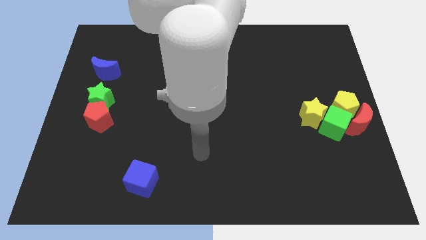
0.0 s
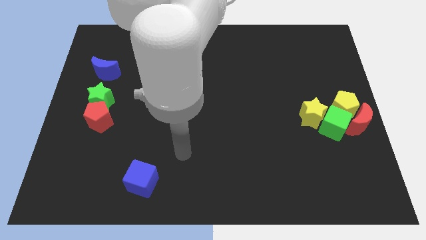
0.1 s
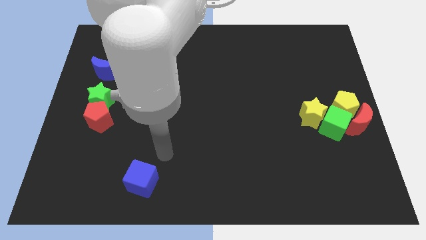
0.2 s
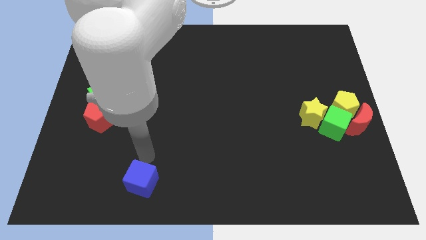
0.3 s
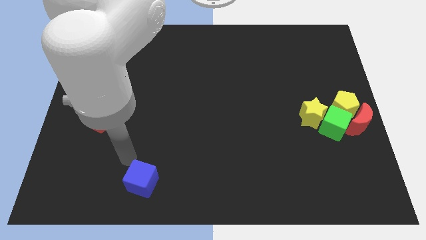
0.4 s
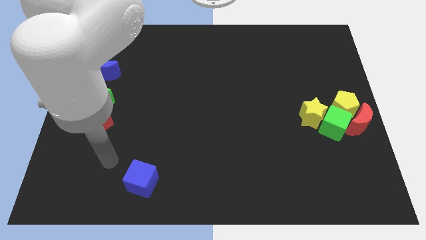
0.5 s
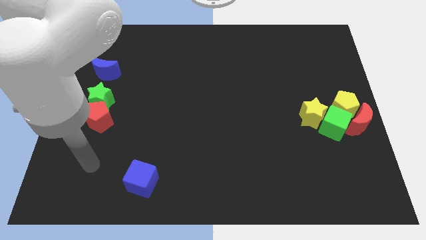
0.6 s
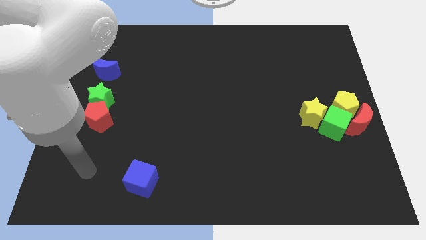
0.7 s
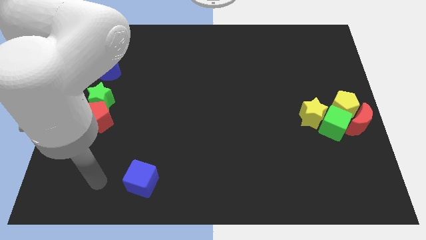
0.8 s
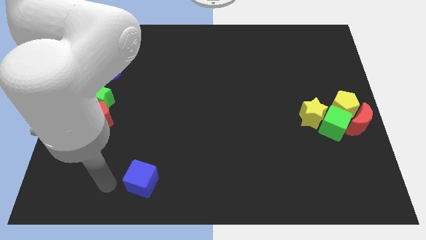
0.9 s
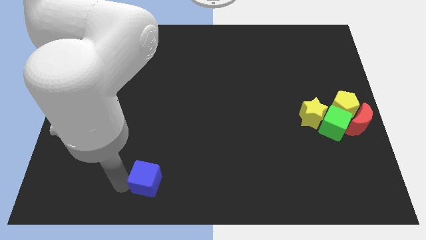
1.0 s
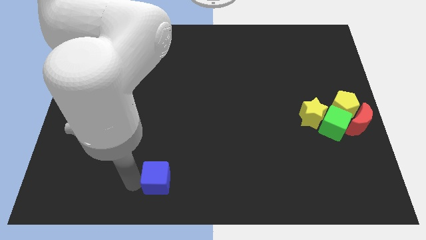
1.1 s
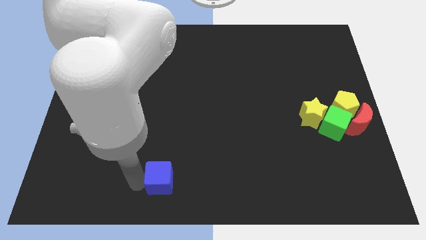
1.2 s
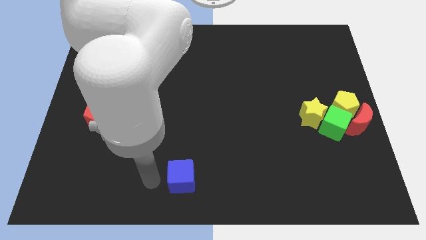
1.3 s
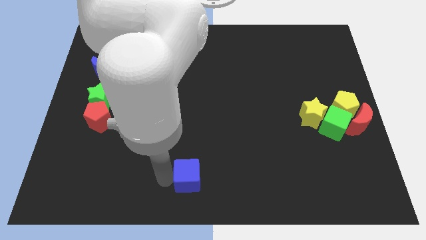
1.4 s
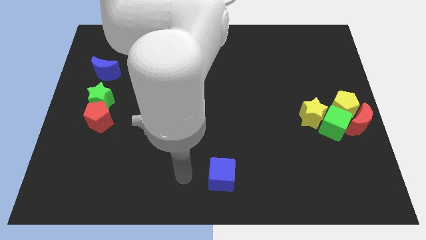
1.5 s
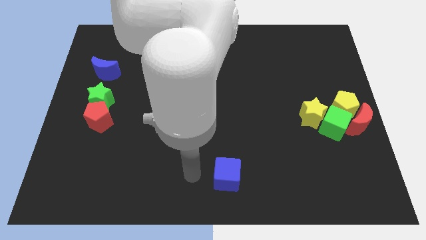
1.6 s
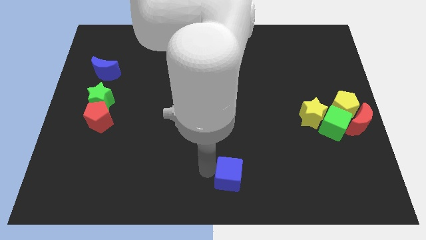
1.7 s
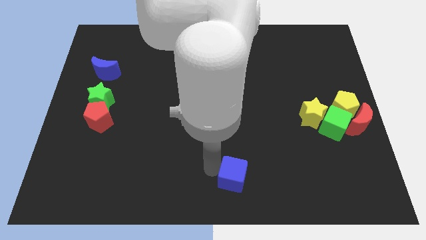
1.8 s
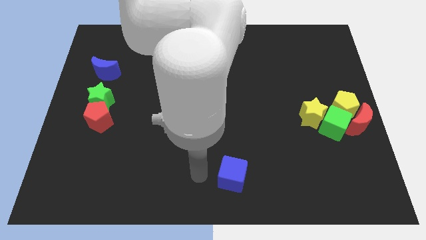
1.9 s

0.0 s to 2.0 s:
push the blue cube to the bottom center of the board

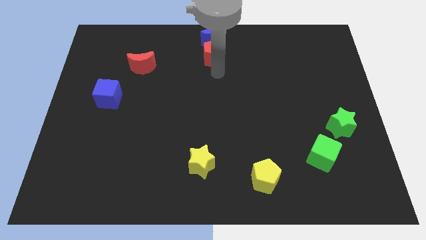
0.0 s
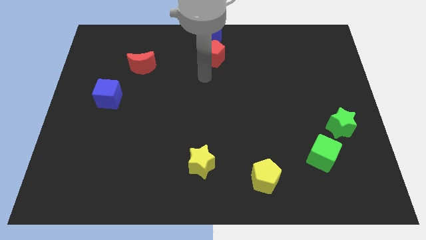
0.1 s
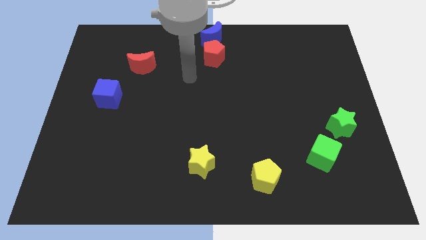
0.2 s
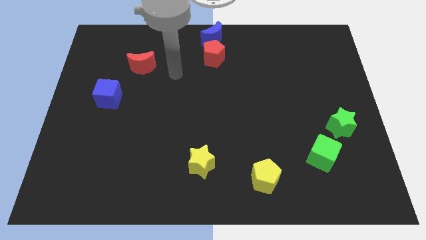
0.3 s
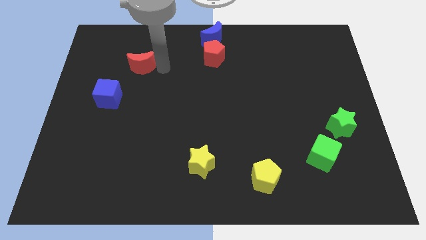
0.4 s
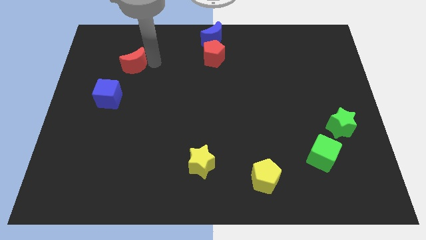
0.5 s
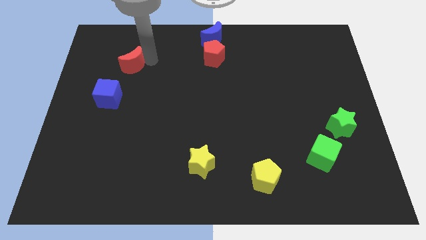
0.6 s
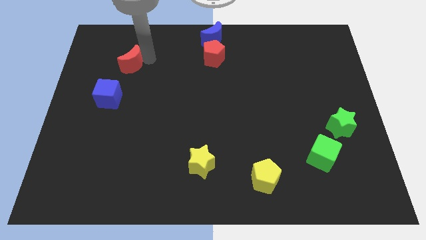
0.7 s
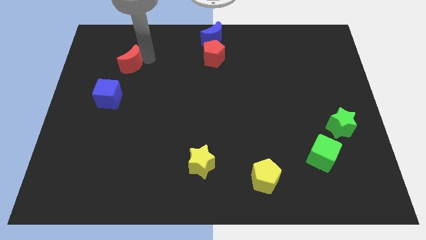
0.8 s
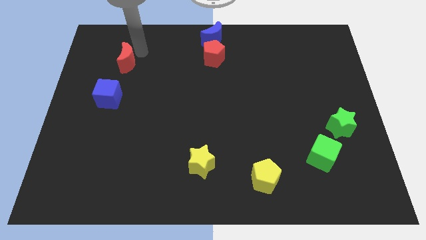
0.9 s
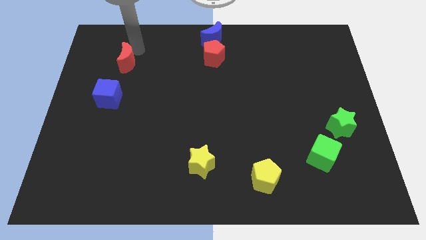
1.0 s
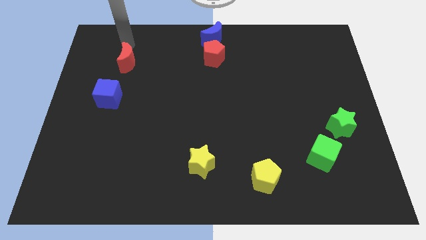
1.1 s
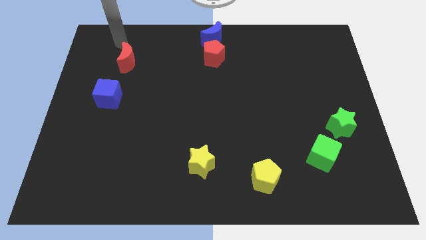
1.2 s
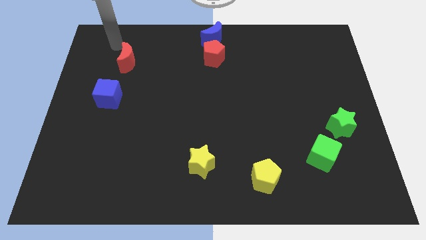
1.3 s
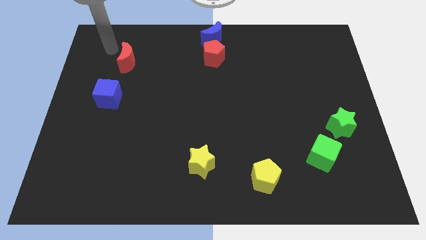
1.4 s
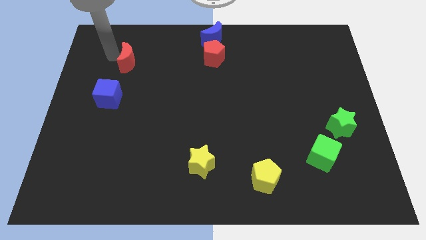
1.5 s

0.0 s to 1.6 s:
place the red moon above the blue cube

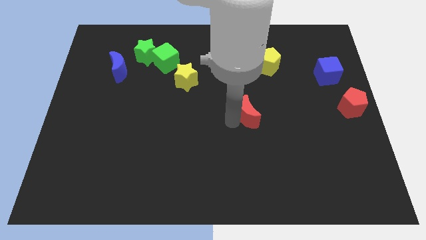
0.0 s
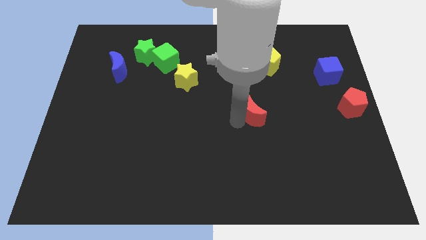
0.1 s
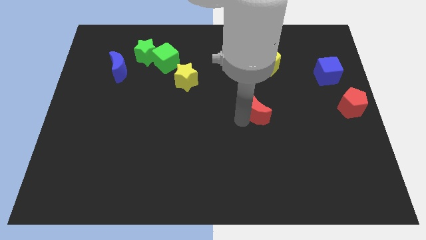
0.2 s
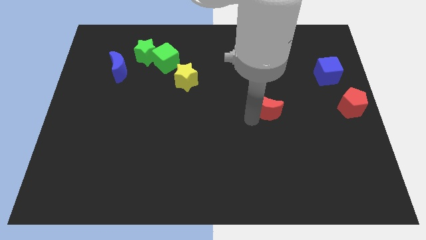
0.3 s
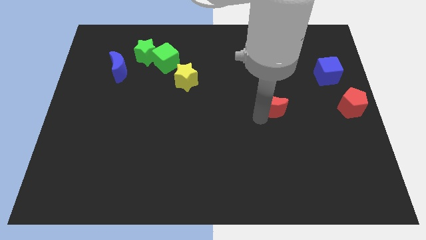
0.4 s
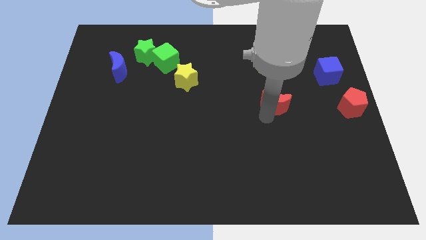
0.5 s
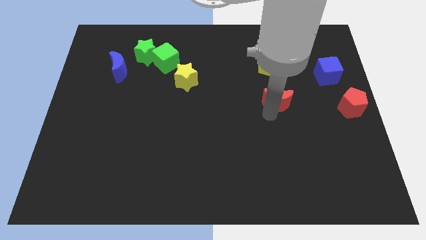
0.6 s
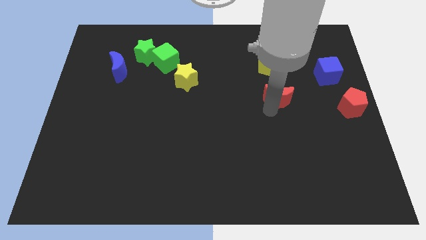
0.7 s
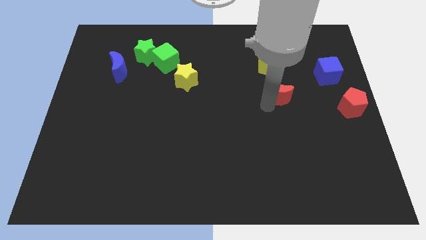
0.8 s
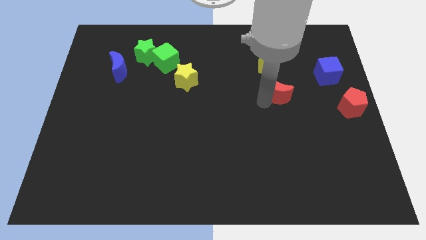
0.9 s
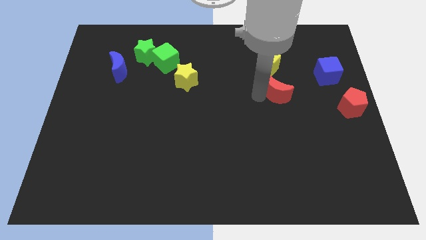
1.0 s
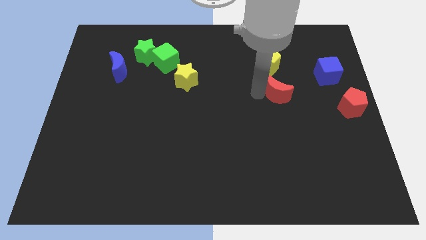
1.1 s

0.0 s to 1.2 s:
place the red moon below the yellow pentagon

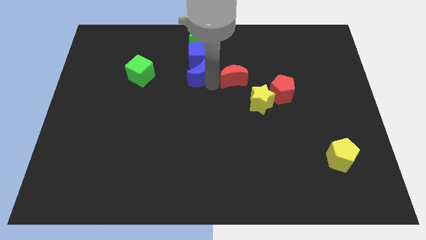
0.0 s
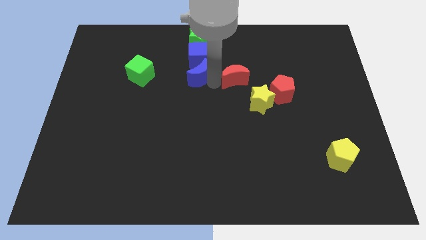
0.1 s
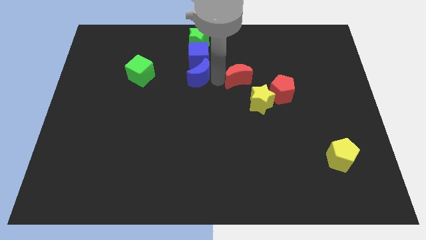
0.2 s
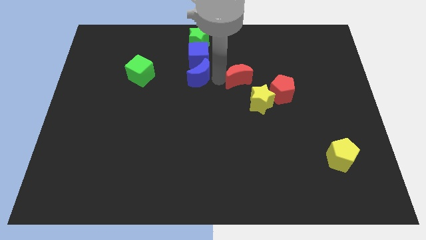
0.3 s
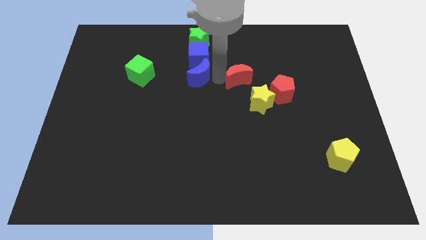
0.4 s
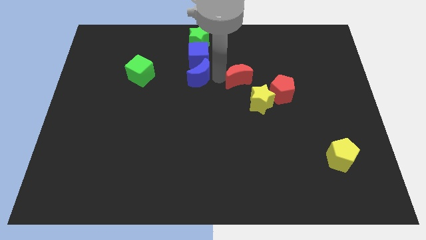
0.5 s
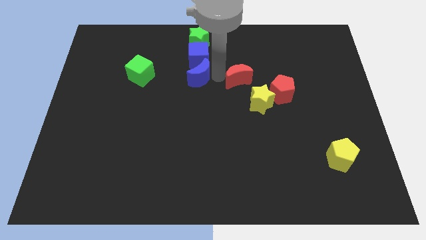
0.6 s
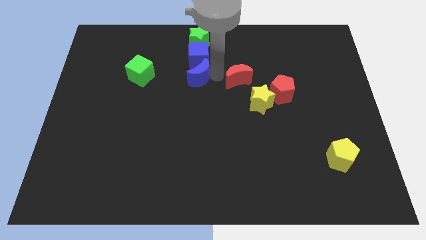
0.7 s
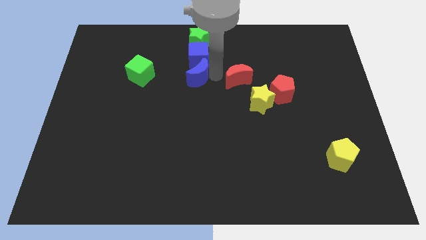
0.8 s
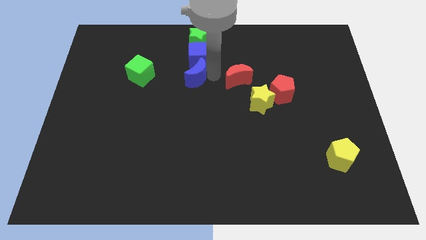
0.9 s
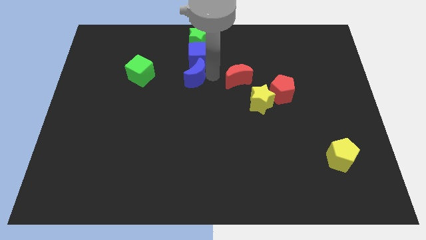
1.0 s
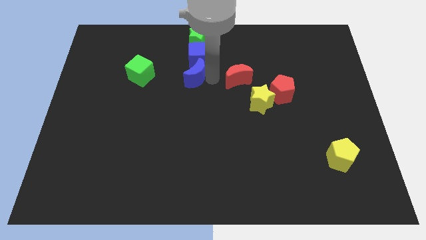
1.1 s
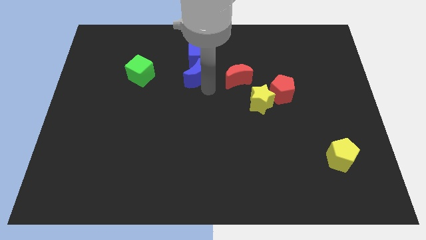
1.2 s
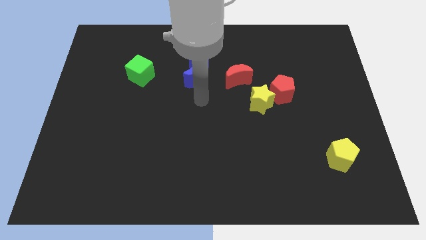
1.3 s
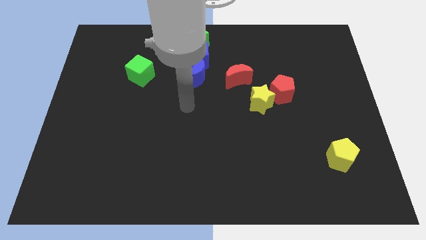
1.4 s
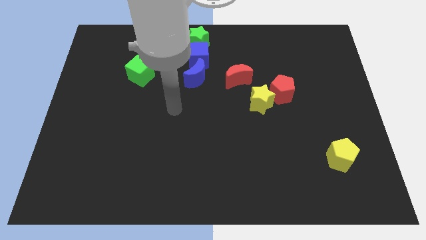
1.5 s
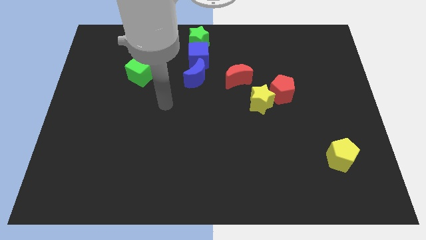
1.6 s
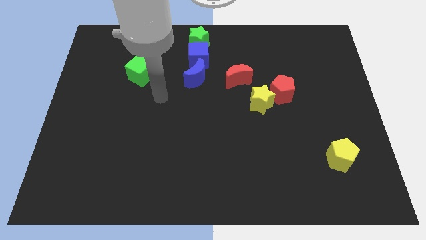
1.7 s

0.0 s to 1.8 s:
move the arm vertically downwards to the center side

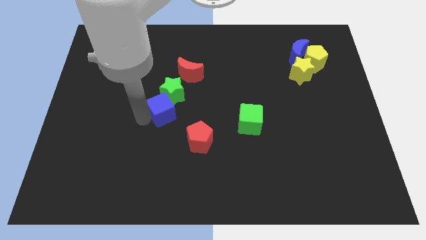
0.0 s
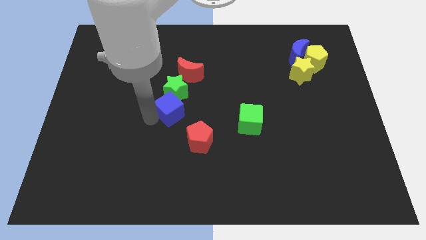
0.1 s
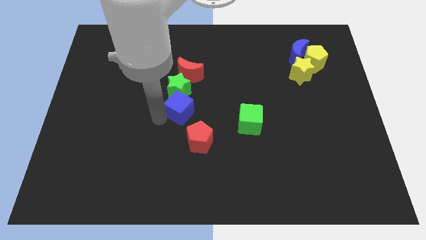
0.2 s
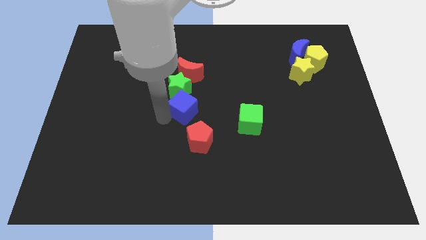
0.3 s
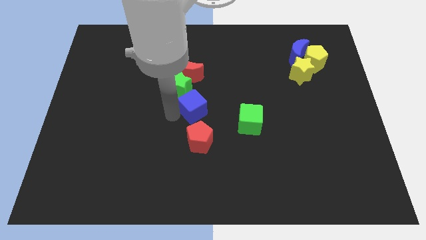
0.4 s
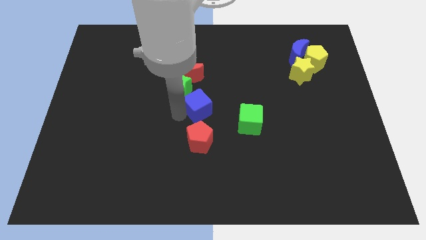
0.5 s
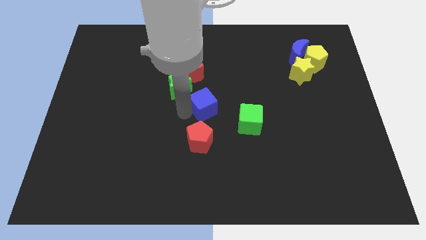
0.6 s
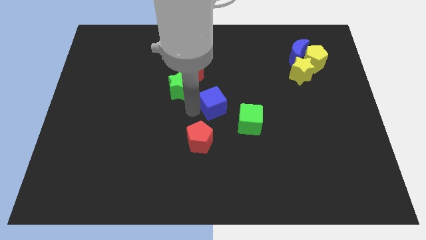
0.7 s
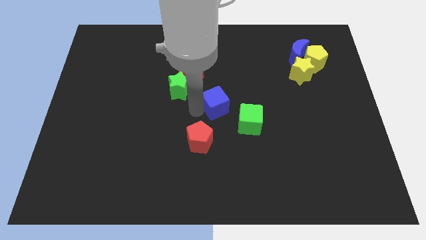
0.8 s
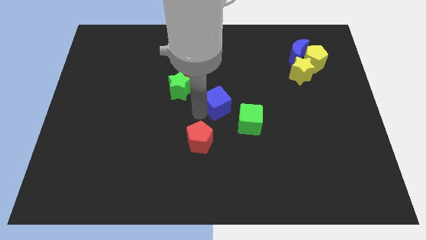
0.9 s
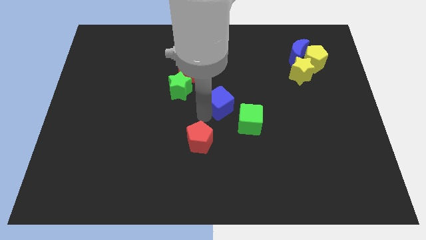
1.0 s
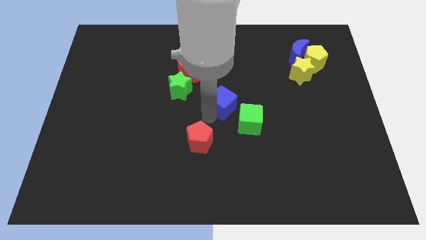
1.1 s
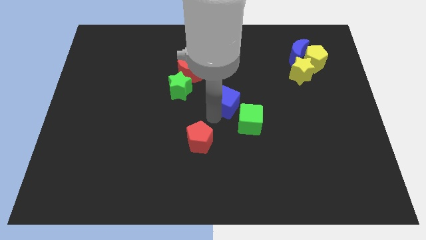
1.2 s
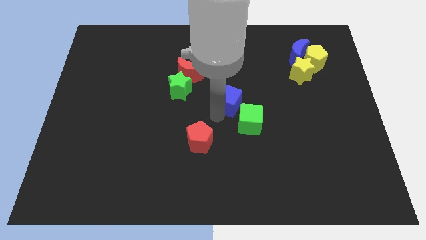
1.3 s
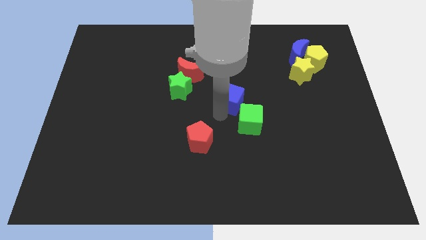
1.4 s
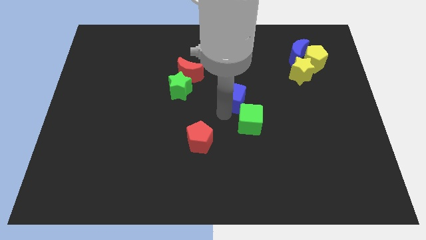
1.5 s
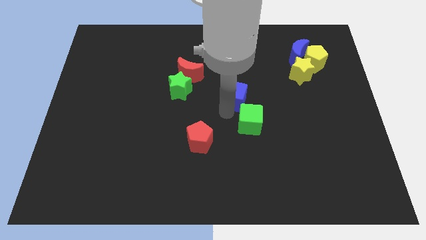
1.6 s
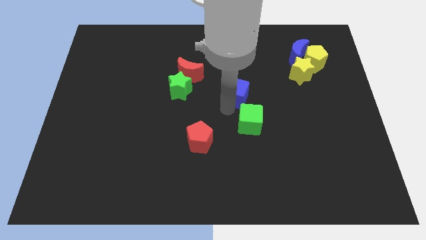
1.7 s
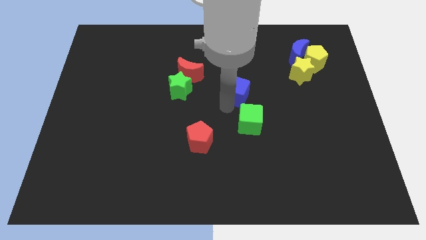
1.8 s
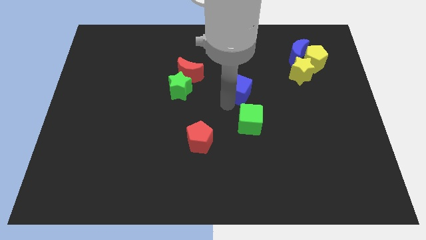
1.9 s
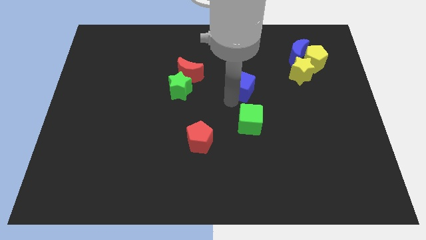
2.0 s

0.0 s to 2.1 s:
drag the blue cube to the center of the board

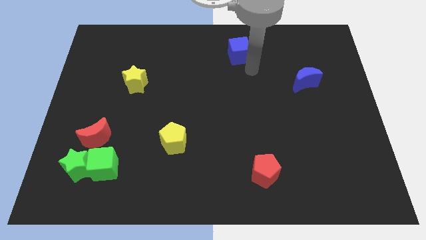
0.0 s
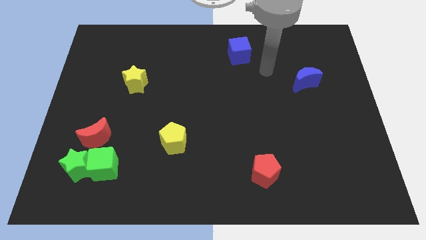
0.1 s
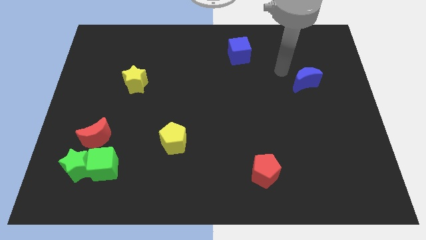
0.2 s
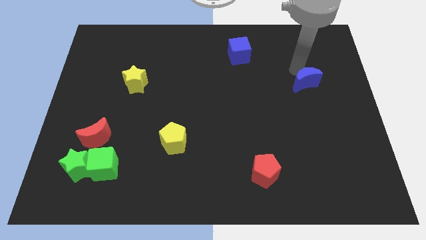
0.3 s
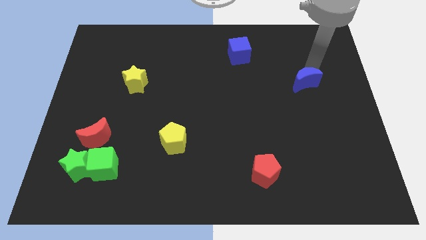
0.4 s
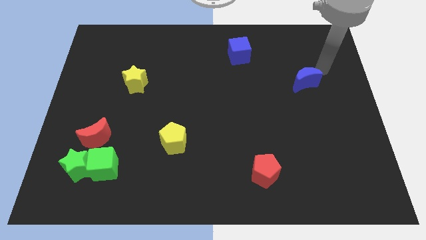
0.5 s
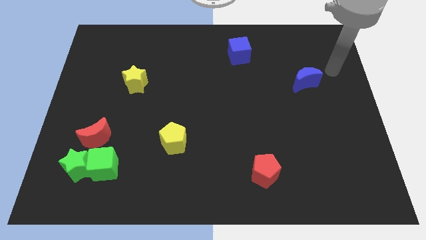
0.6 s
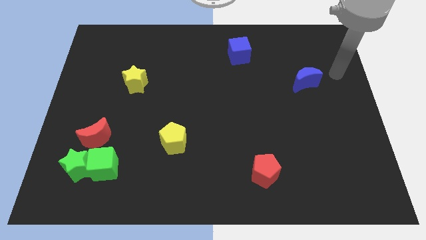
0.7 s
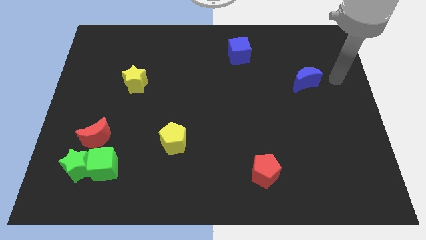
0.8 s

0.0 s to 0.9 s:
point the arm to the right of the blue moon
